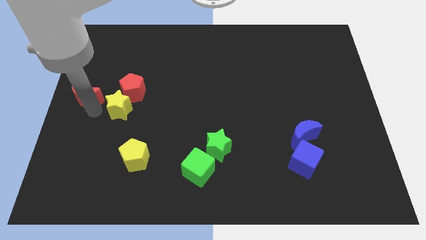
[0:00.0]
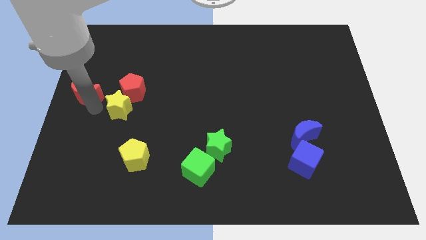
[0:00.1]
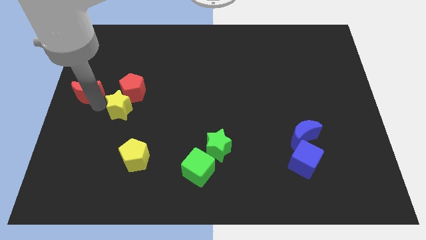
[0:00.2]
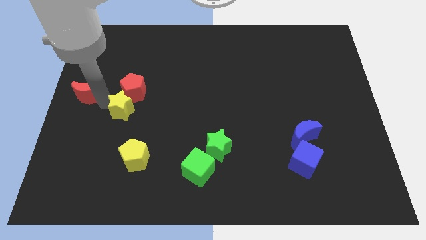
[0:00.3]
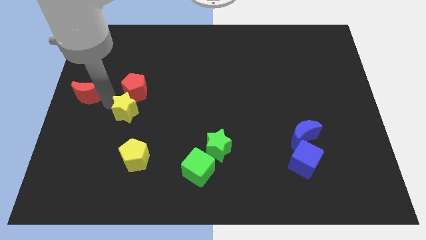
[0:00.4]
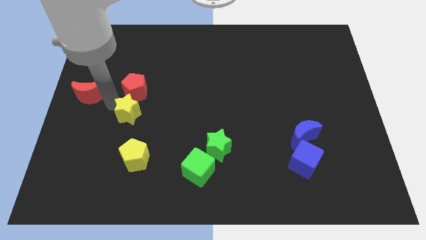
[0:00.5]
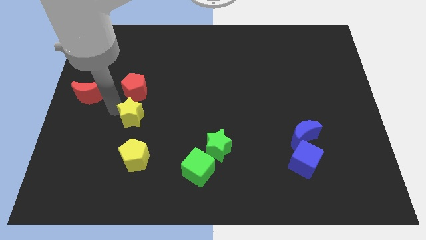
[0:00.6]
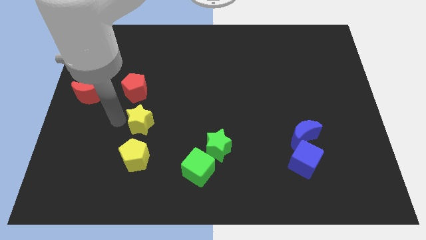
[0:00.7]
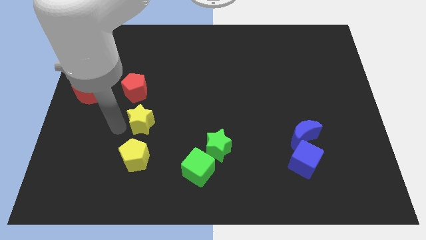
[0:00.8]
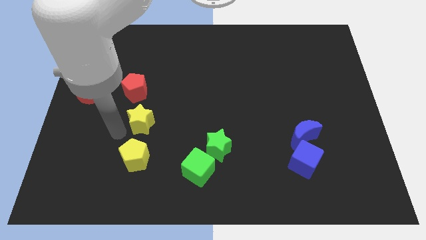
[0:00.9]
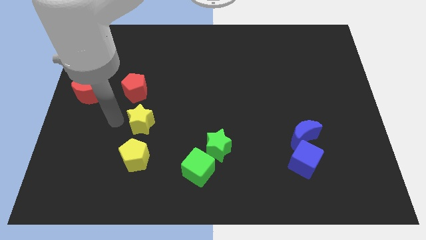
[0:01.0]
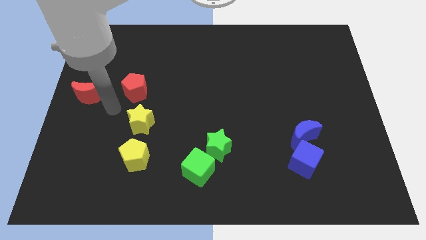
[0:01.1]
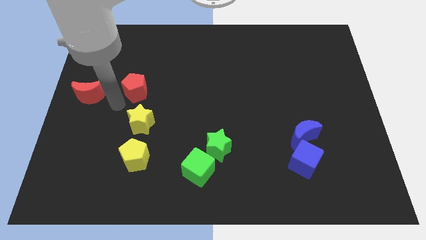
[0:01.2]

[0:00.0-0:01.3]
place yellow star to the top of yellow pentagon

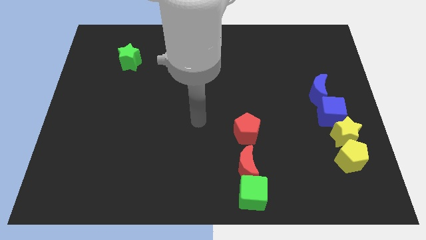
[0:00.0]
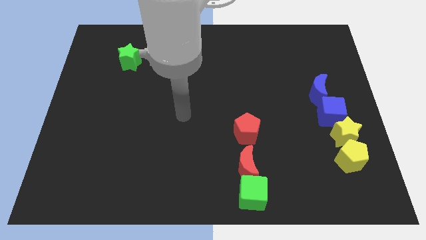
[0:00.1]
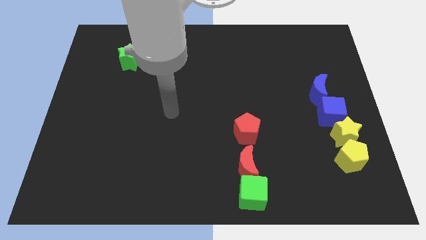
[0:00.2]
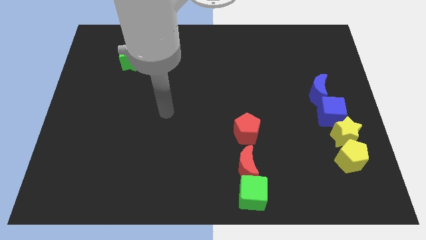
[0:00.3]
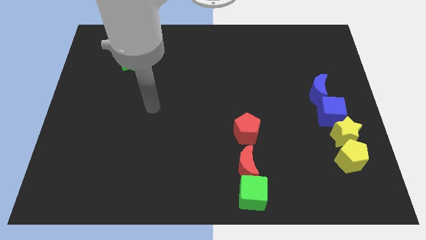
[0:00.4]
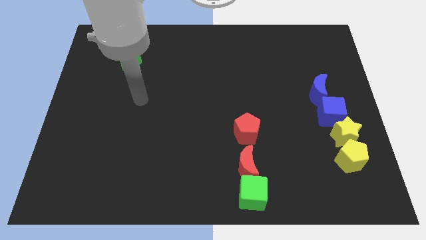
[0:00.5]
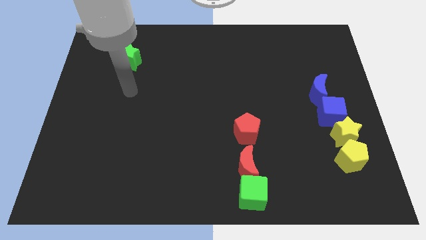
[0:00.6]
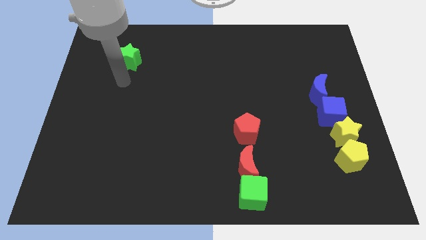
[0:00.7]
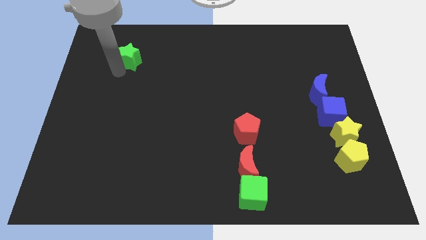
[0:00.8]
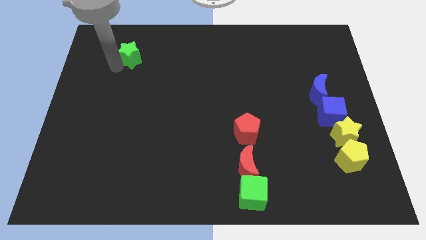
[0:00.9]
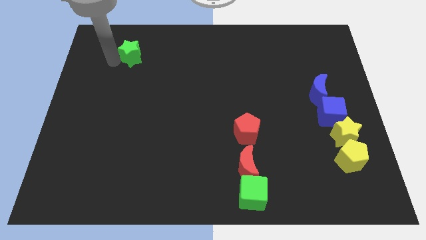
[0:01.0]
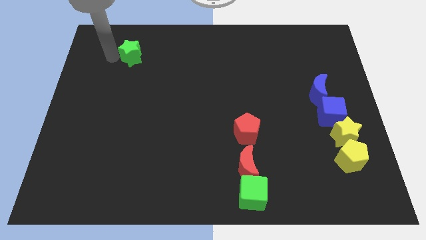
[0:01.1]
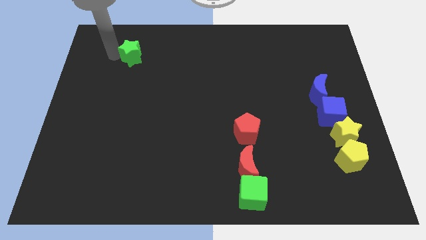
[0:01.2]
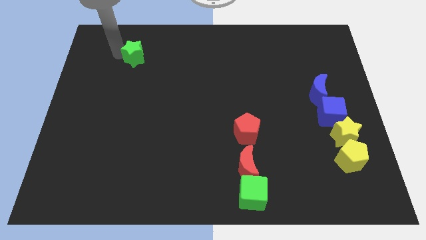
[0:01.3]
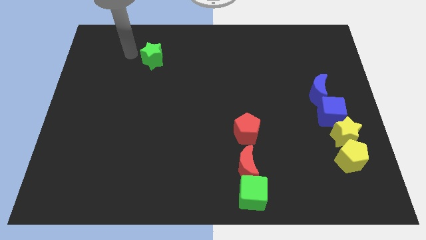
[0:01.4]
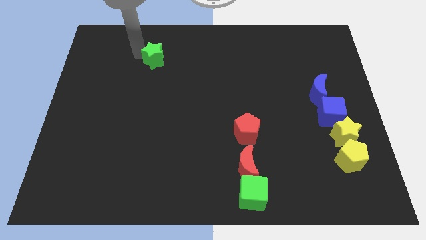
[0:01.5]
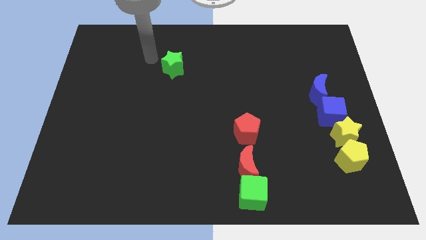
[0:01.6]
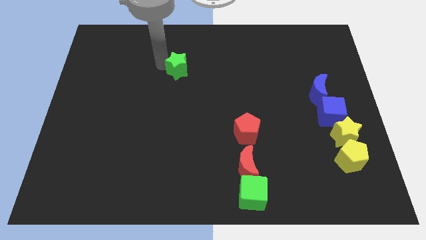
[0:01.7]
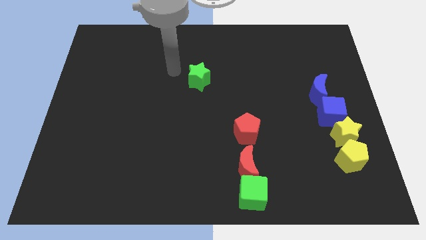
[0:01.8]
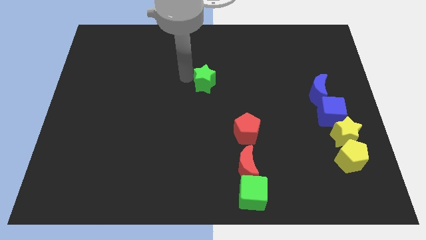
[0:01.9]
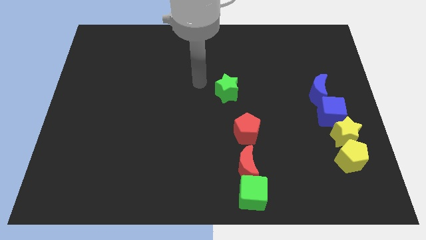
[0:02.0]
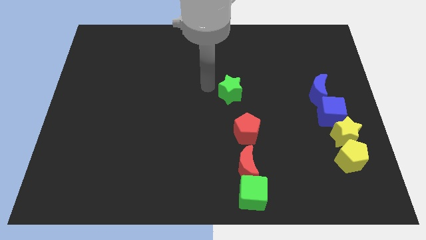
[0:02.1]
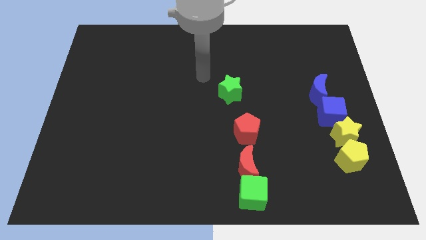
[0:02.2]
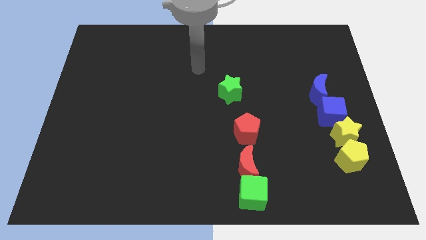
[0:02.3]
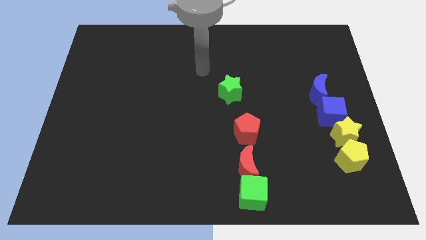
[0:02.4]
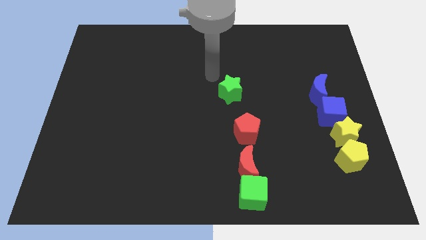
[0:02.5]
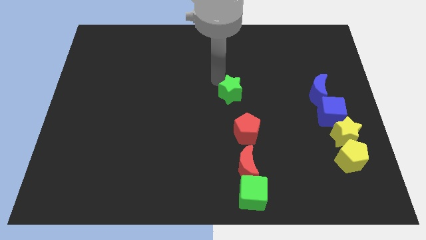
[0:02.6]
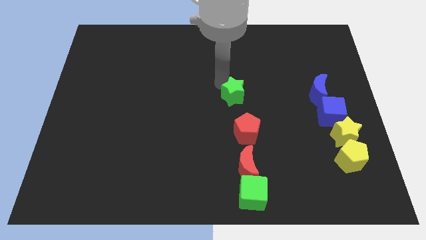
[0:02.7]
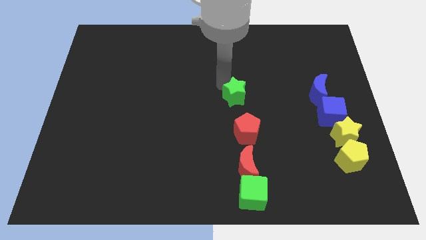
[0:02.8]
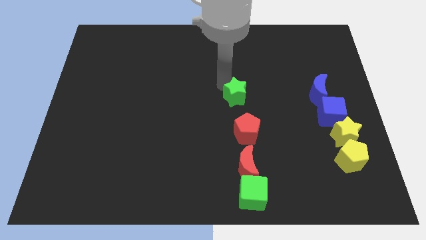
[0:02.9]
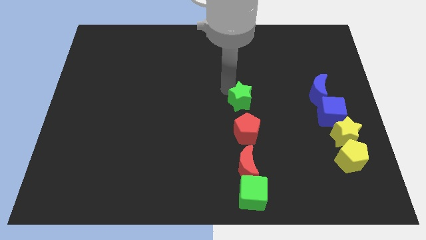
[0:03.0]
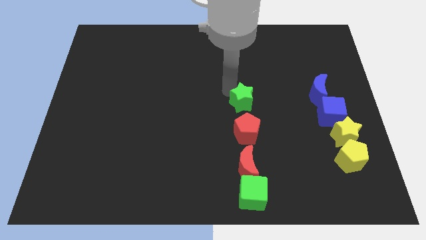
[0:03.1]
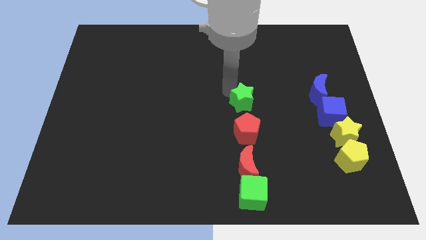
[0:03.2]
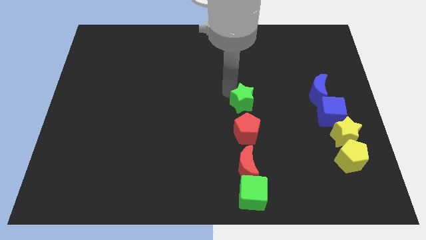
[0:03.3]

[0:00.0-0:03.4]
place the green star above the red pentagon

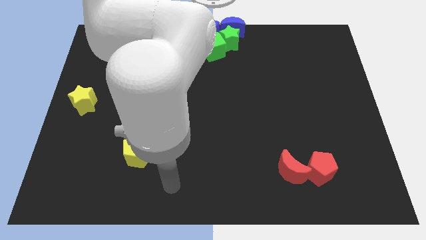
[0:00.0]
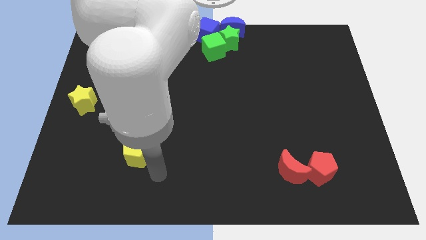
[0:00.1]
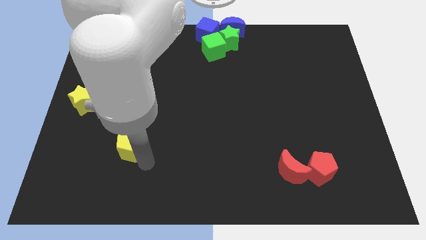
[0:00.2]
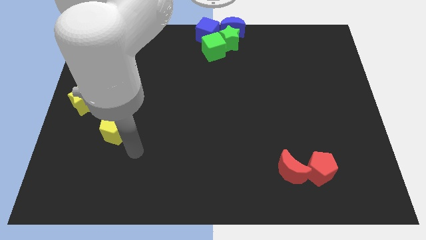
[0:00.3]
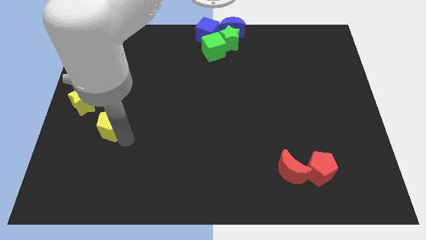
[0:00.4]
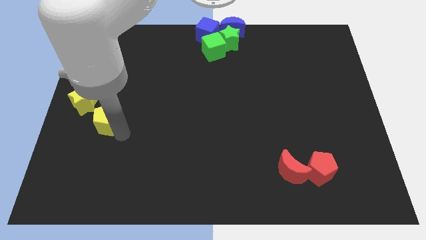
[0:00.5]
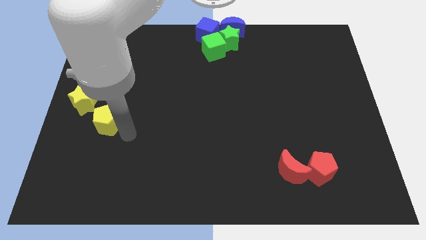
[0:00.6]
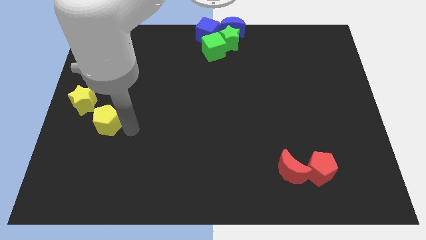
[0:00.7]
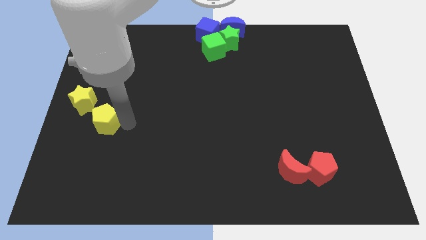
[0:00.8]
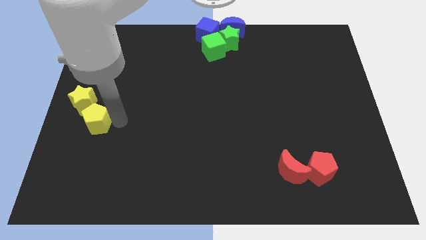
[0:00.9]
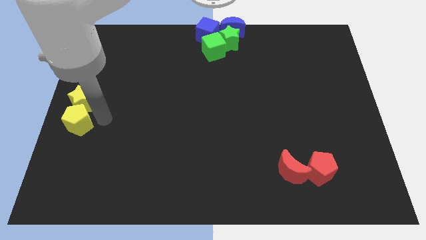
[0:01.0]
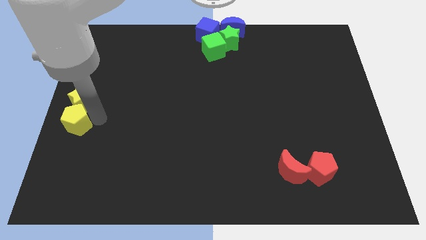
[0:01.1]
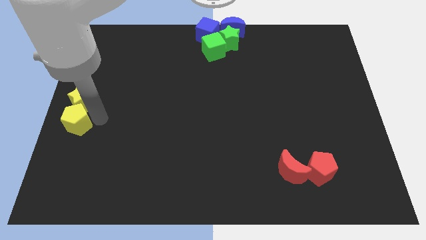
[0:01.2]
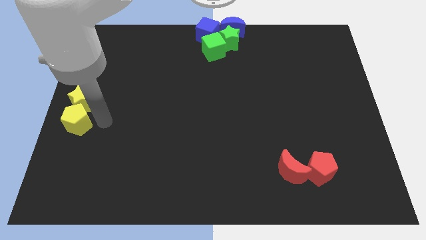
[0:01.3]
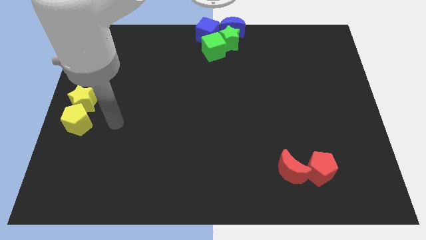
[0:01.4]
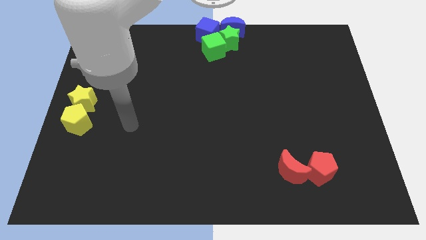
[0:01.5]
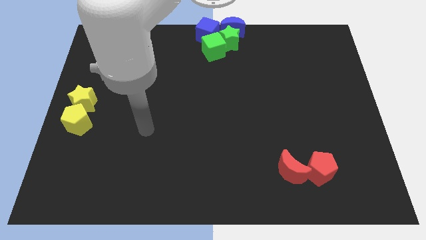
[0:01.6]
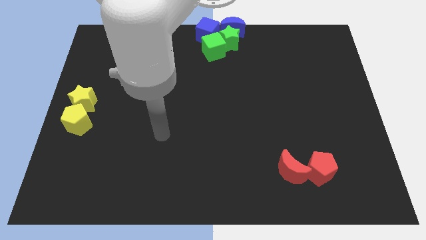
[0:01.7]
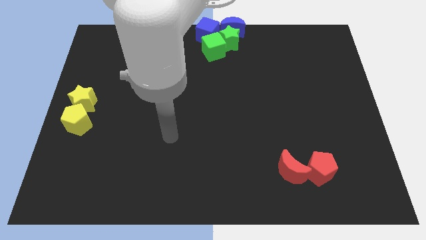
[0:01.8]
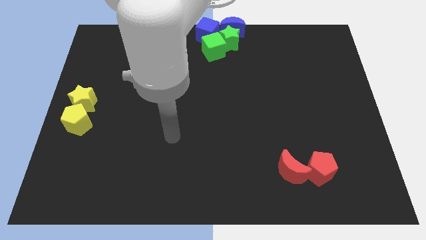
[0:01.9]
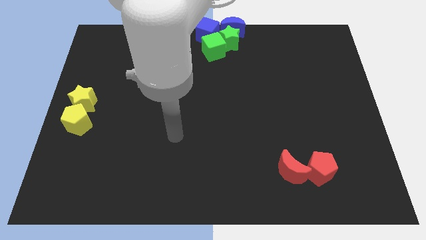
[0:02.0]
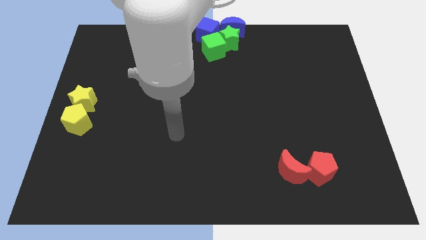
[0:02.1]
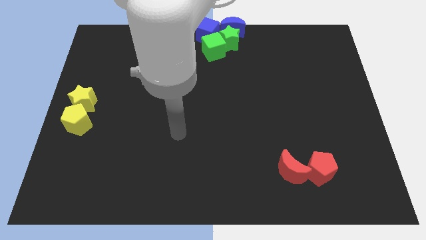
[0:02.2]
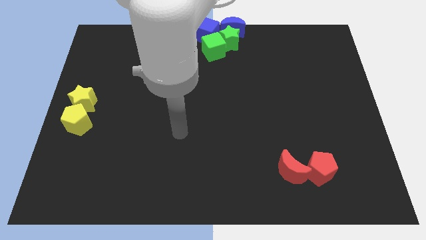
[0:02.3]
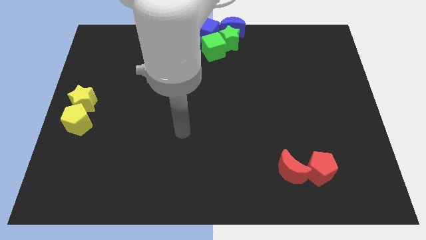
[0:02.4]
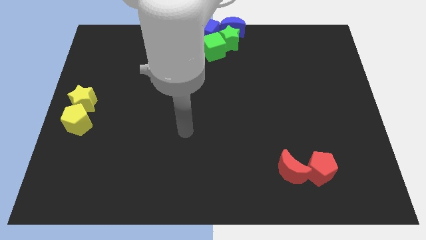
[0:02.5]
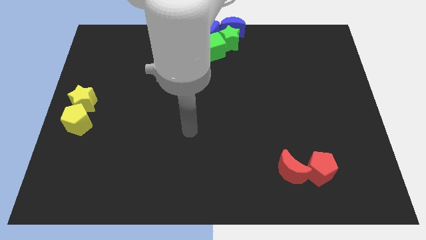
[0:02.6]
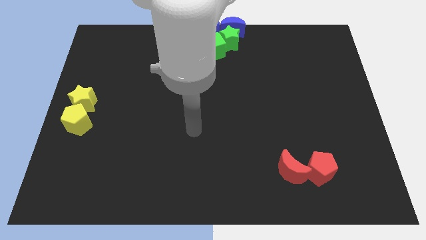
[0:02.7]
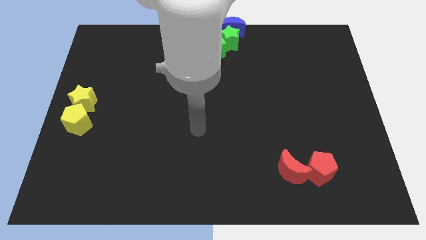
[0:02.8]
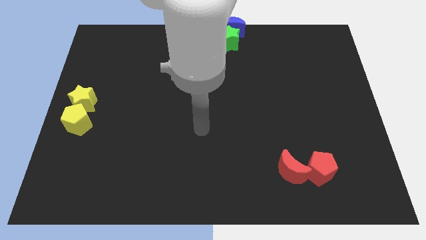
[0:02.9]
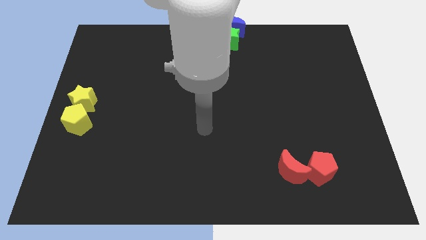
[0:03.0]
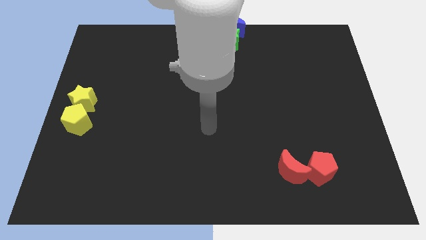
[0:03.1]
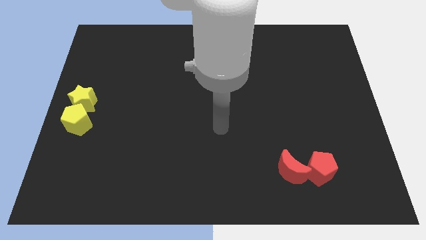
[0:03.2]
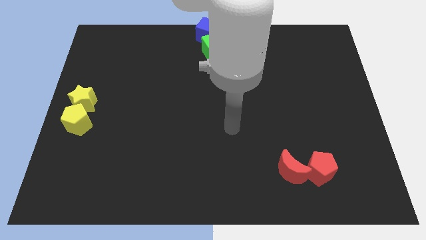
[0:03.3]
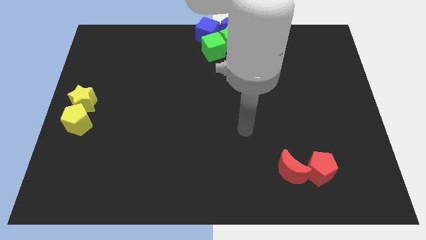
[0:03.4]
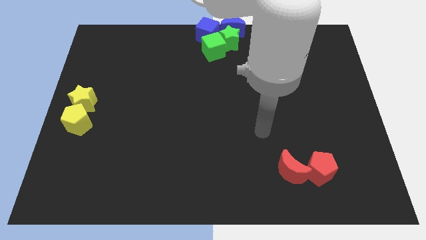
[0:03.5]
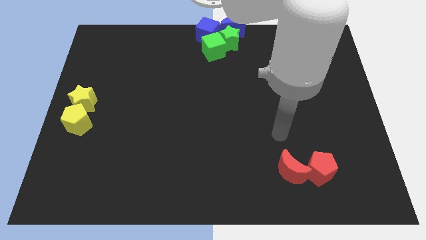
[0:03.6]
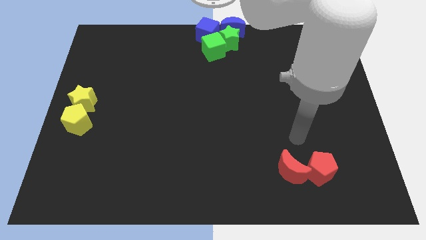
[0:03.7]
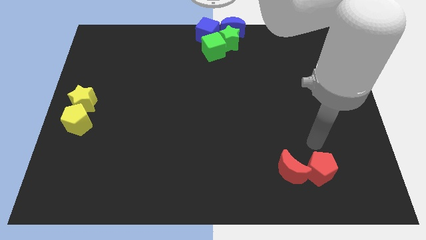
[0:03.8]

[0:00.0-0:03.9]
place the yellow pentagon below the yellow star

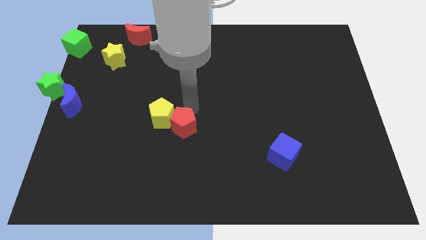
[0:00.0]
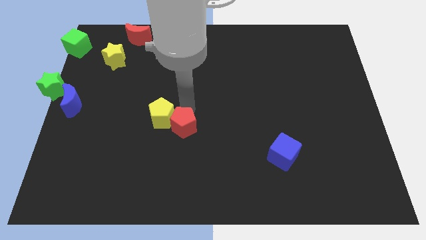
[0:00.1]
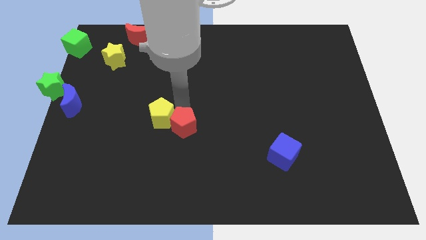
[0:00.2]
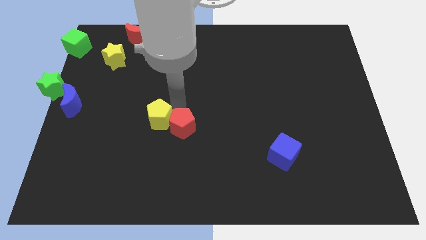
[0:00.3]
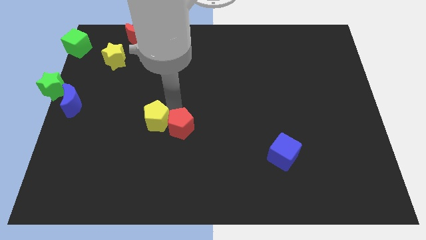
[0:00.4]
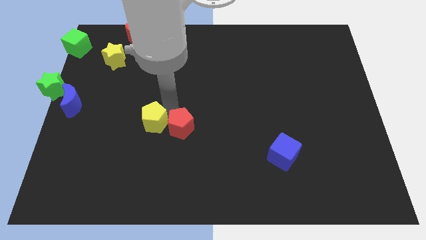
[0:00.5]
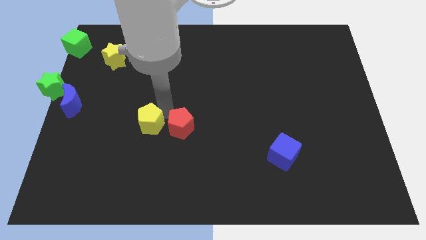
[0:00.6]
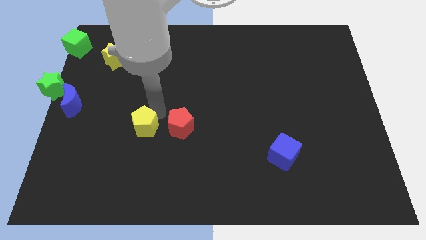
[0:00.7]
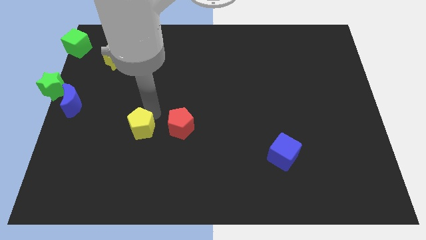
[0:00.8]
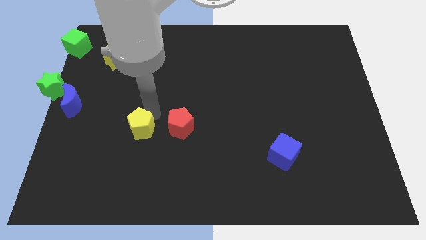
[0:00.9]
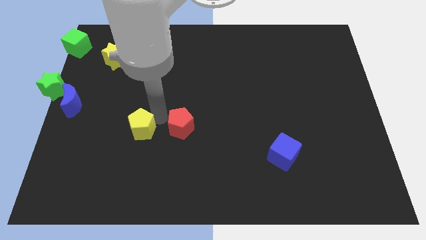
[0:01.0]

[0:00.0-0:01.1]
separate yellow and red pentagons from each other
